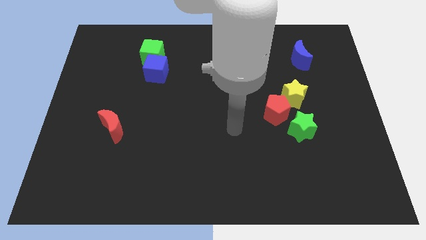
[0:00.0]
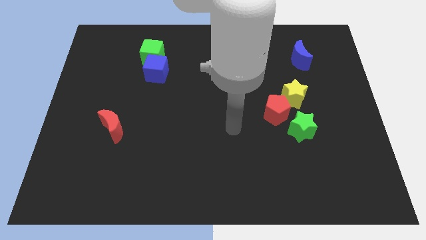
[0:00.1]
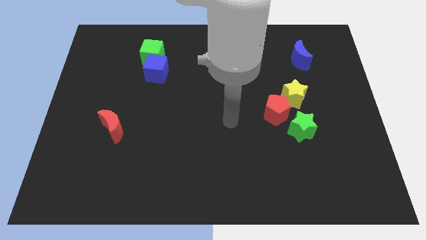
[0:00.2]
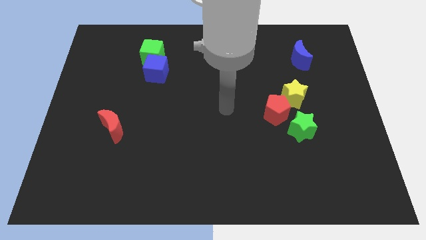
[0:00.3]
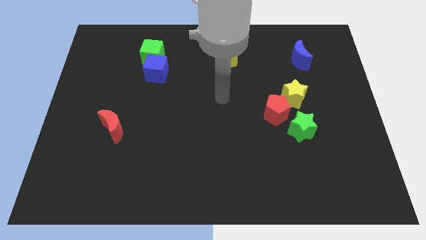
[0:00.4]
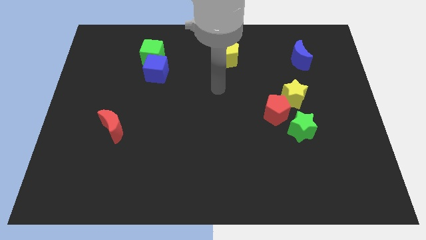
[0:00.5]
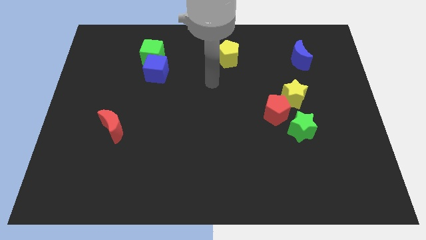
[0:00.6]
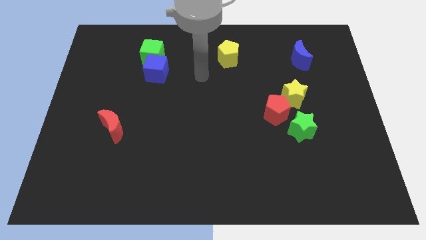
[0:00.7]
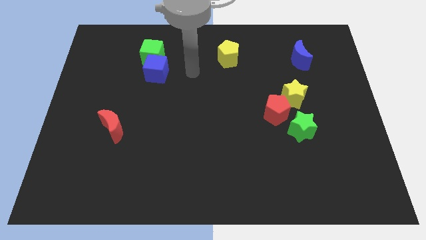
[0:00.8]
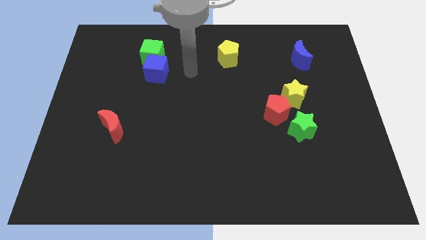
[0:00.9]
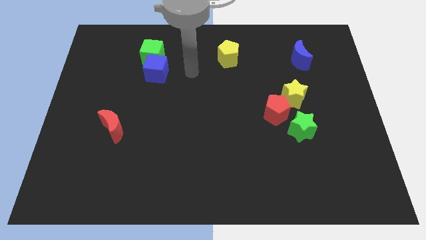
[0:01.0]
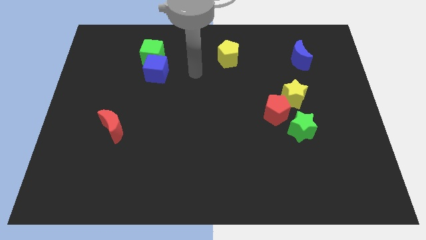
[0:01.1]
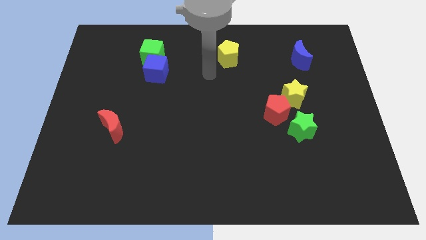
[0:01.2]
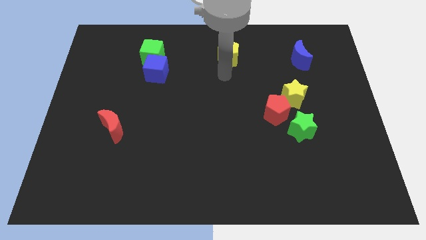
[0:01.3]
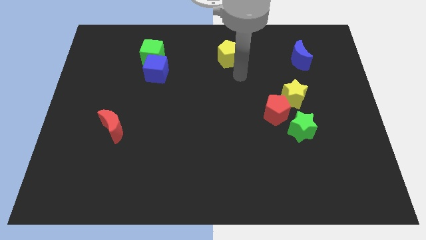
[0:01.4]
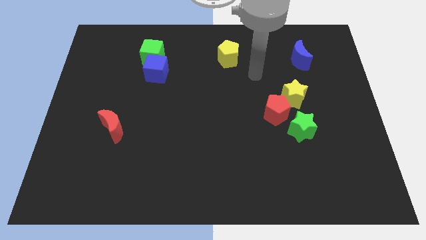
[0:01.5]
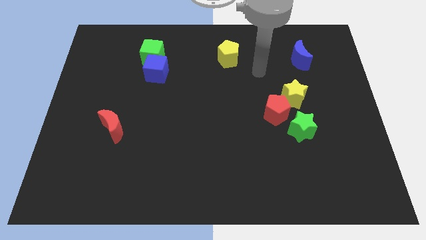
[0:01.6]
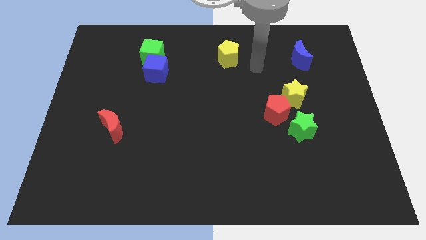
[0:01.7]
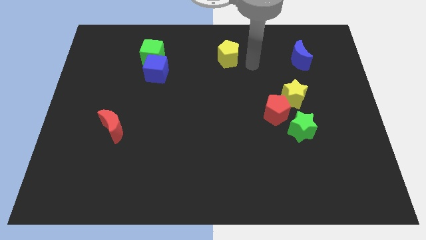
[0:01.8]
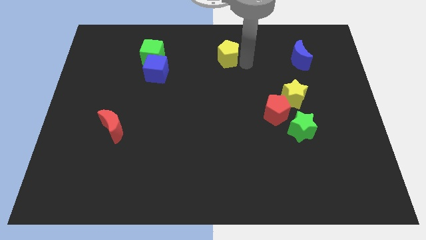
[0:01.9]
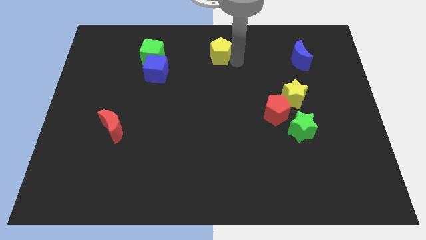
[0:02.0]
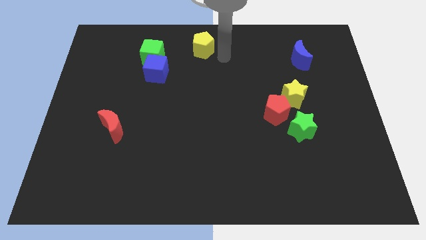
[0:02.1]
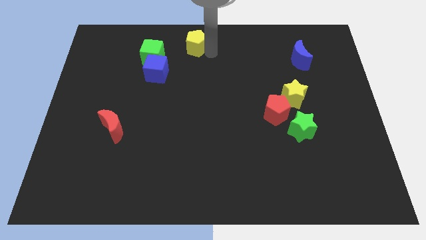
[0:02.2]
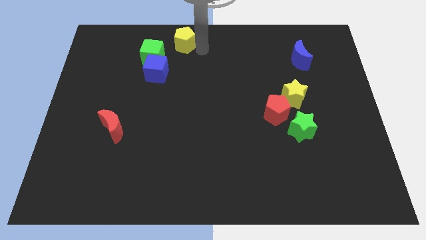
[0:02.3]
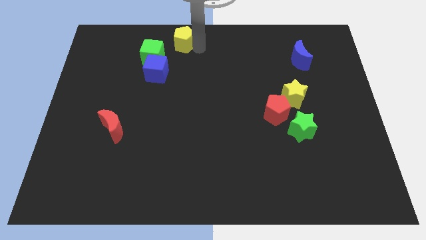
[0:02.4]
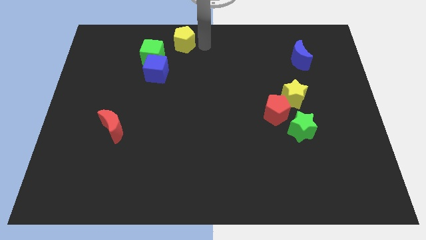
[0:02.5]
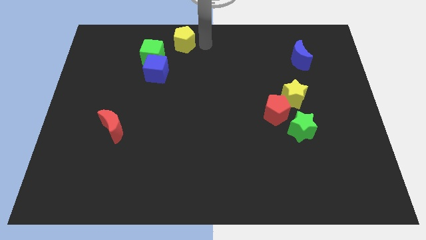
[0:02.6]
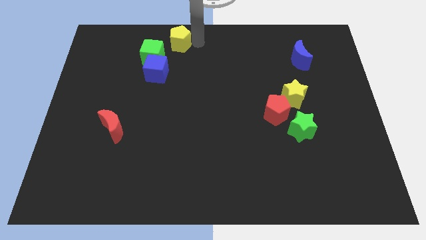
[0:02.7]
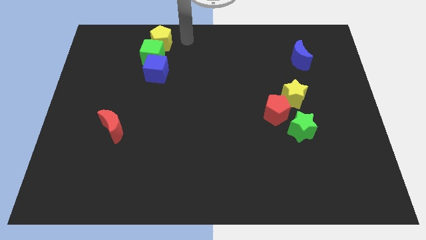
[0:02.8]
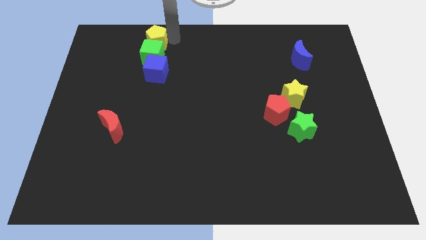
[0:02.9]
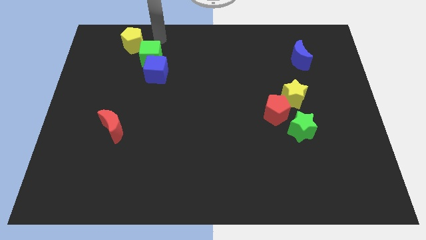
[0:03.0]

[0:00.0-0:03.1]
push the yellow pentagon diagonally to the top left of green cube

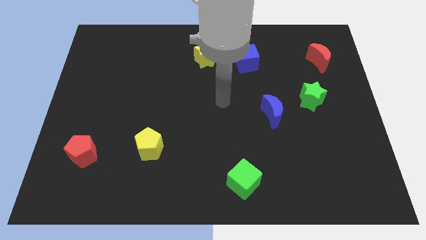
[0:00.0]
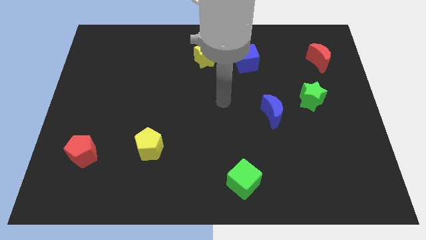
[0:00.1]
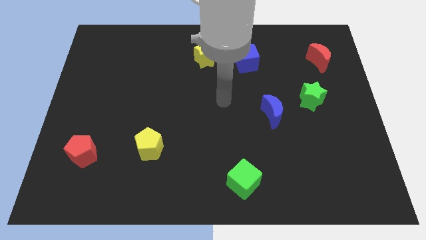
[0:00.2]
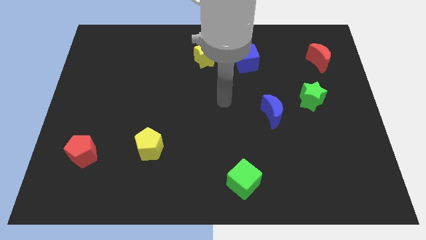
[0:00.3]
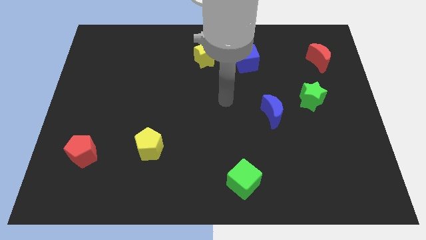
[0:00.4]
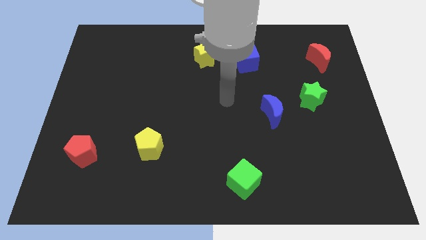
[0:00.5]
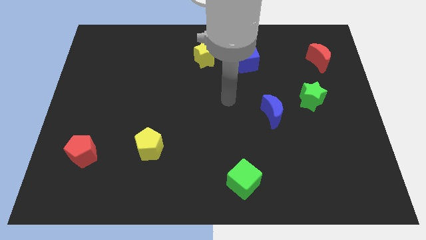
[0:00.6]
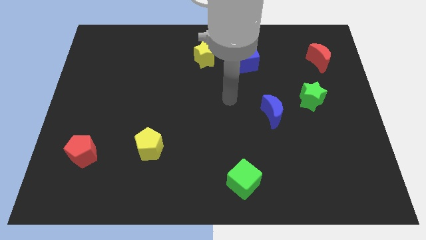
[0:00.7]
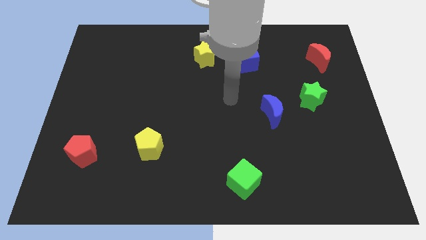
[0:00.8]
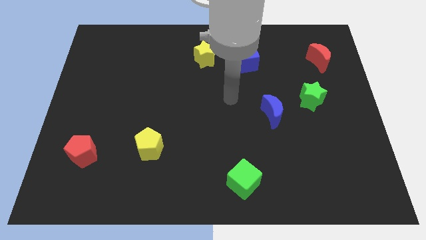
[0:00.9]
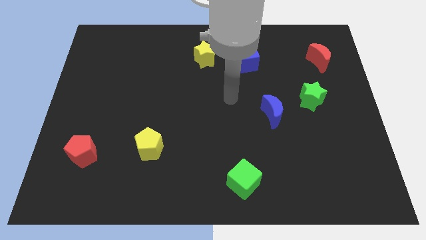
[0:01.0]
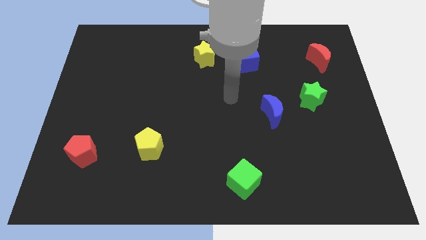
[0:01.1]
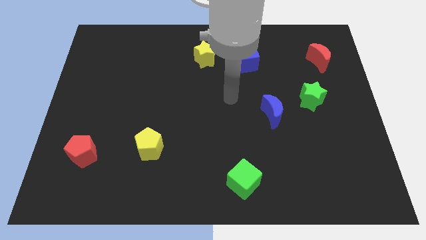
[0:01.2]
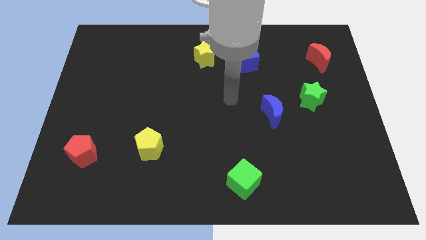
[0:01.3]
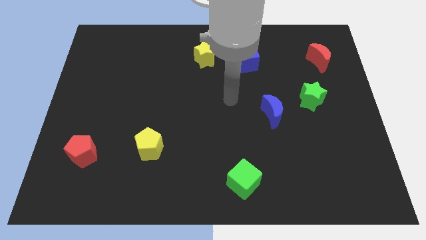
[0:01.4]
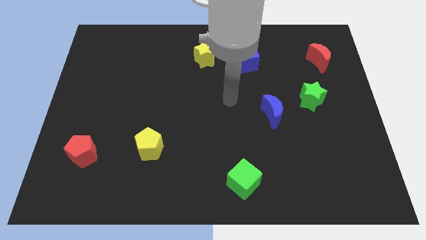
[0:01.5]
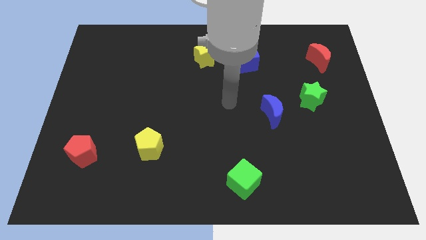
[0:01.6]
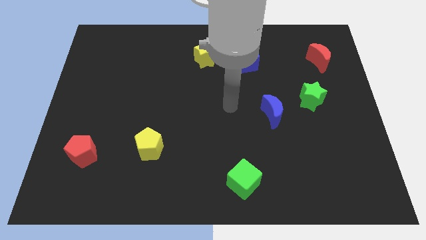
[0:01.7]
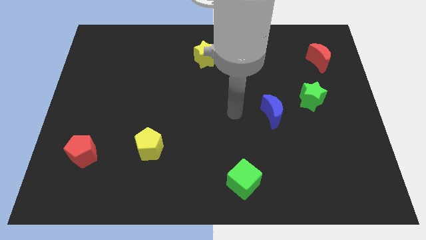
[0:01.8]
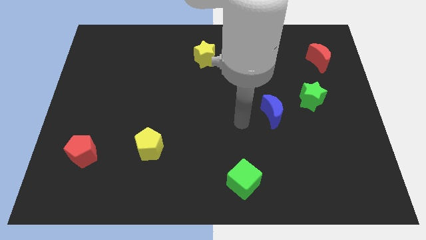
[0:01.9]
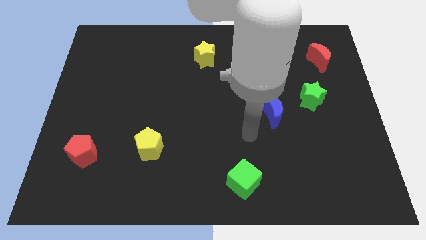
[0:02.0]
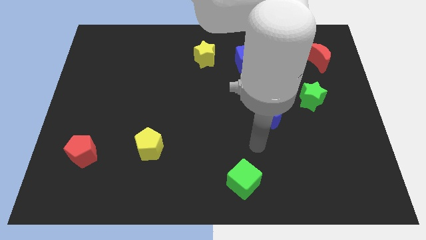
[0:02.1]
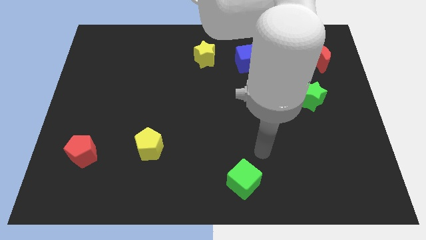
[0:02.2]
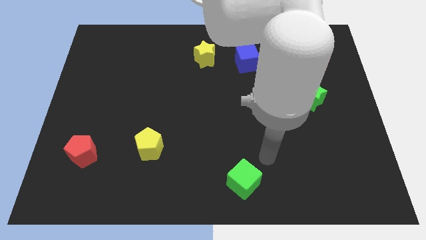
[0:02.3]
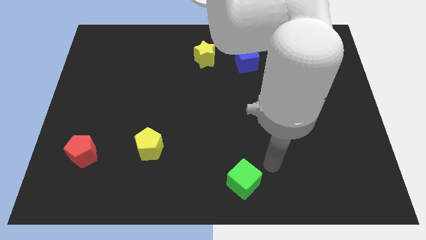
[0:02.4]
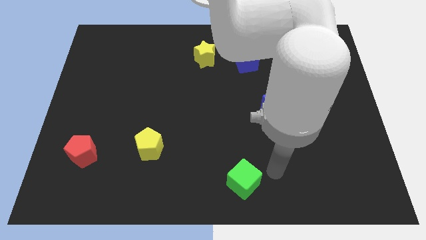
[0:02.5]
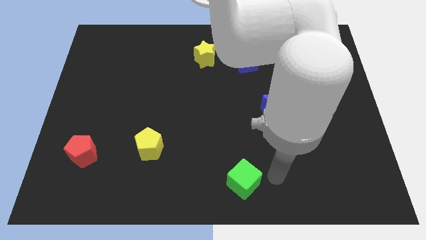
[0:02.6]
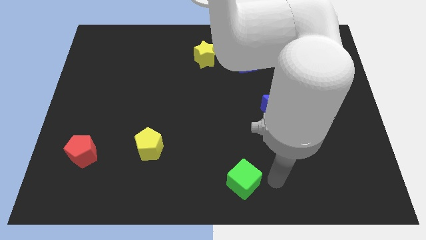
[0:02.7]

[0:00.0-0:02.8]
place your arm to the right of the green cube

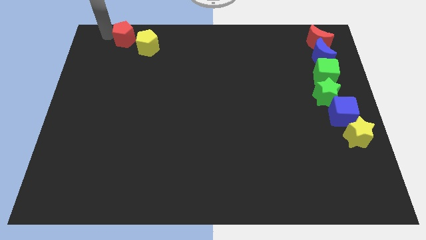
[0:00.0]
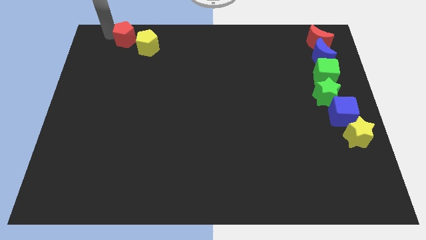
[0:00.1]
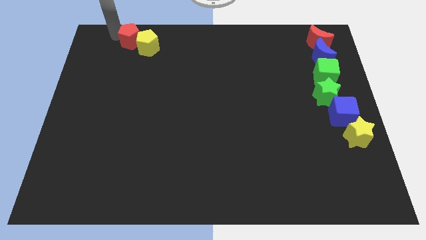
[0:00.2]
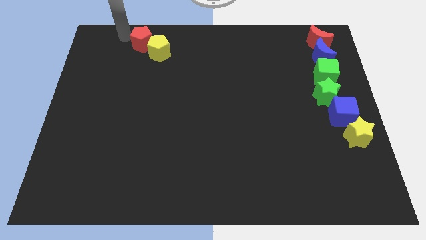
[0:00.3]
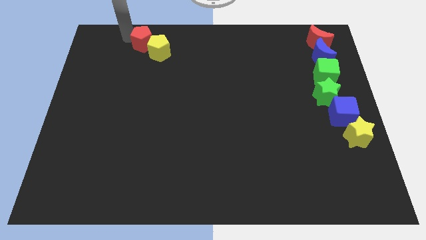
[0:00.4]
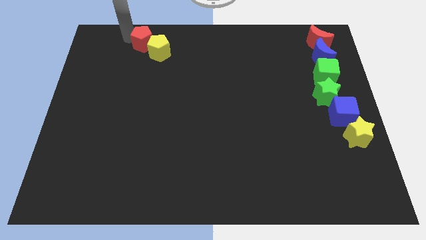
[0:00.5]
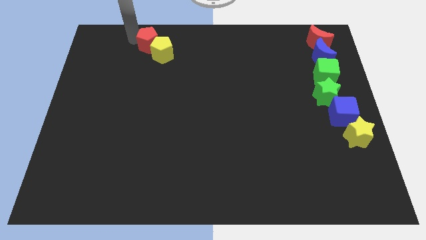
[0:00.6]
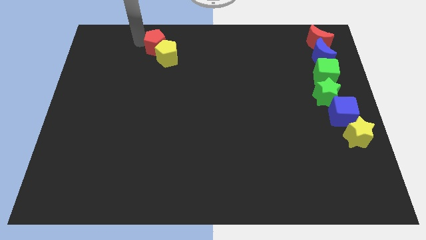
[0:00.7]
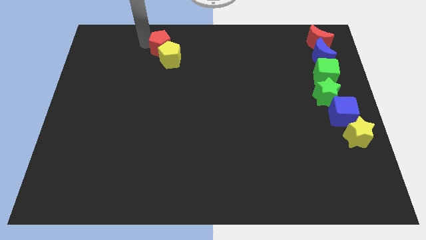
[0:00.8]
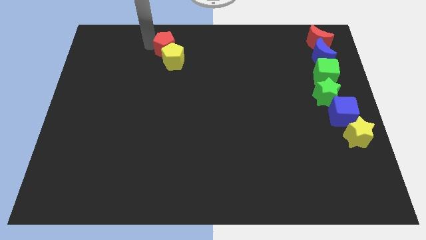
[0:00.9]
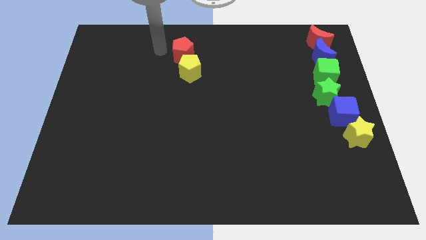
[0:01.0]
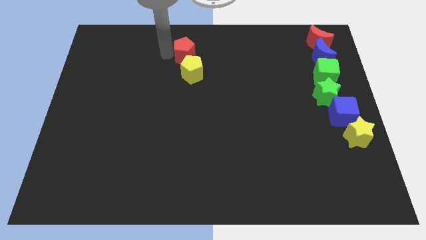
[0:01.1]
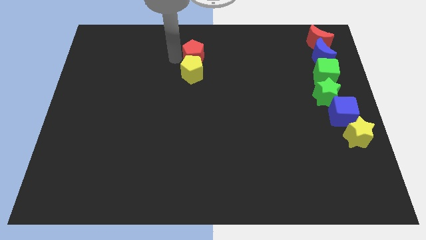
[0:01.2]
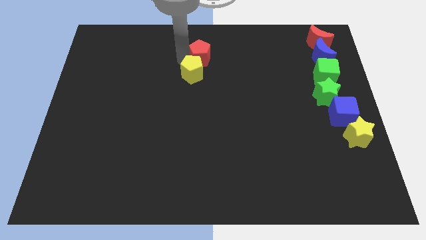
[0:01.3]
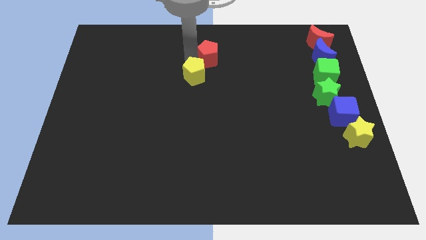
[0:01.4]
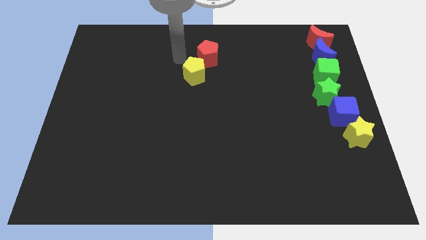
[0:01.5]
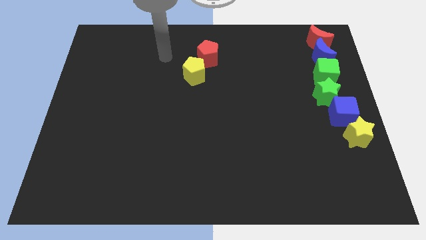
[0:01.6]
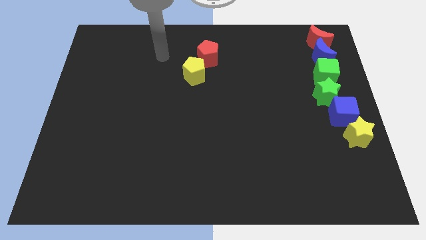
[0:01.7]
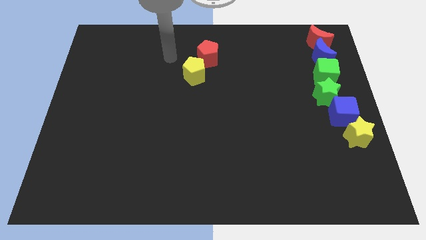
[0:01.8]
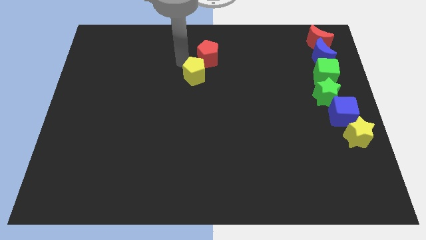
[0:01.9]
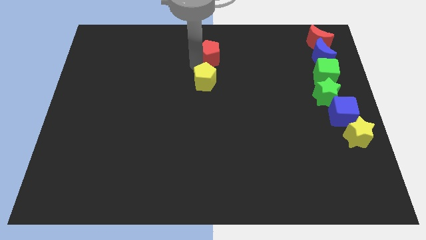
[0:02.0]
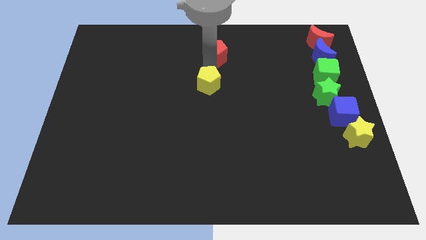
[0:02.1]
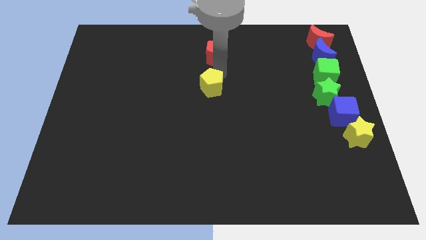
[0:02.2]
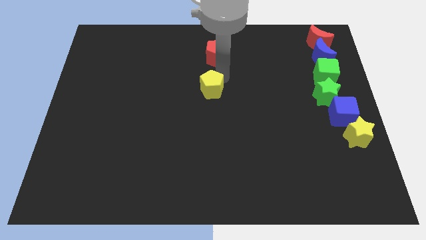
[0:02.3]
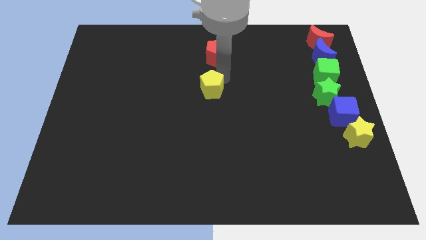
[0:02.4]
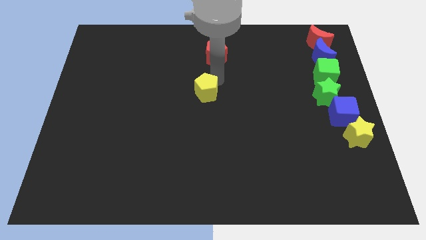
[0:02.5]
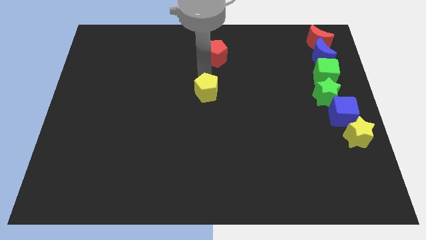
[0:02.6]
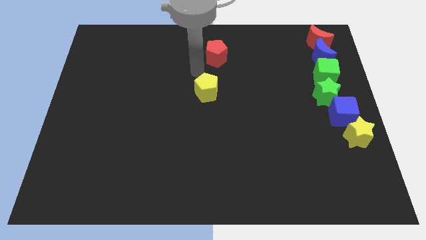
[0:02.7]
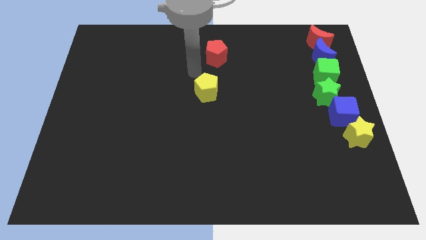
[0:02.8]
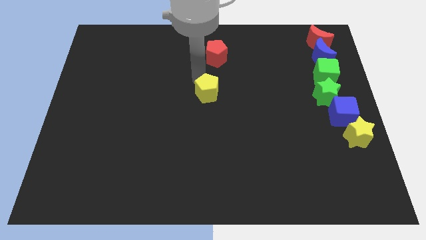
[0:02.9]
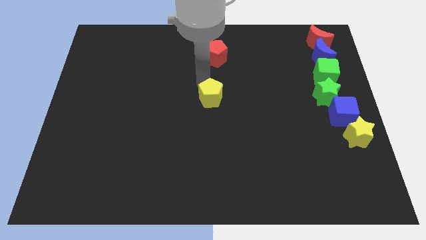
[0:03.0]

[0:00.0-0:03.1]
separate yellow pentagon from the red pentagon
